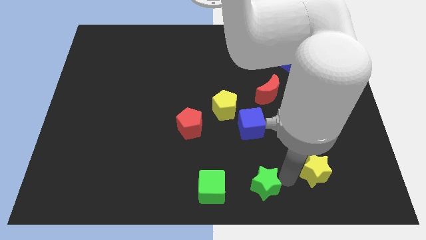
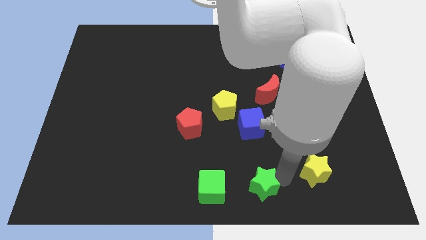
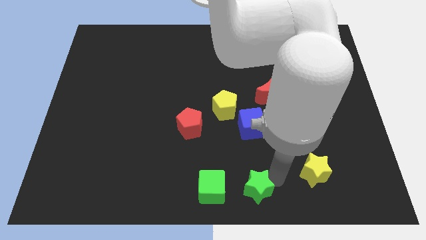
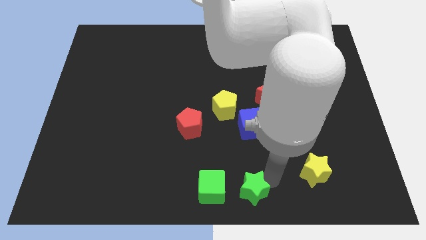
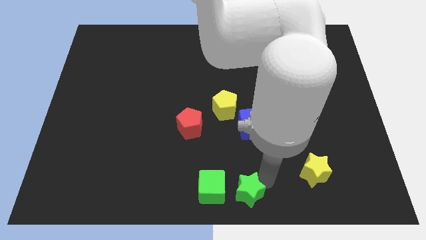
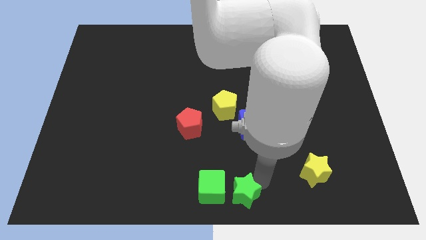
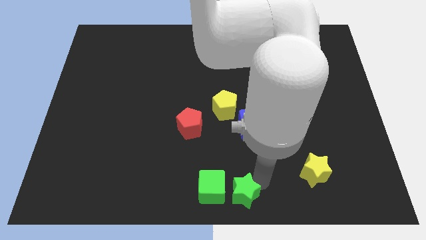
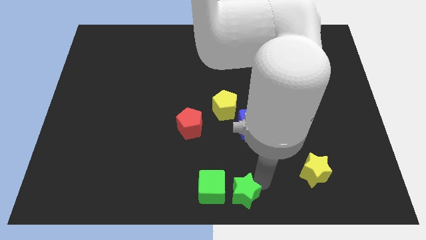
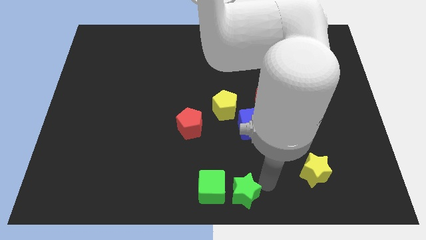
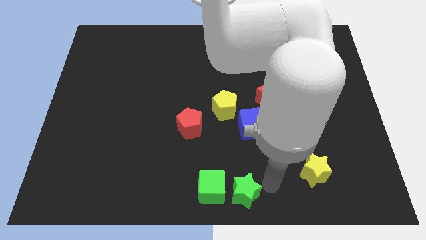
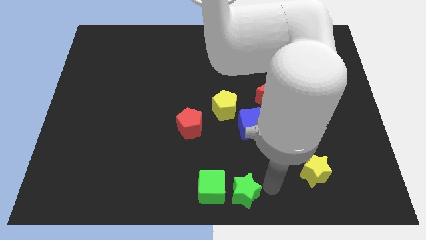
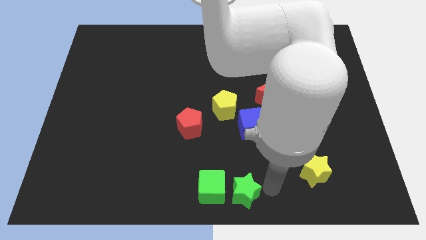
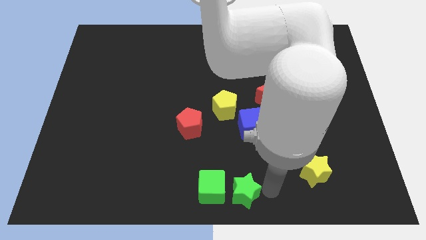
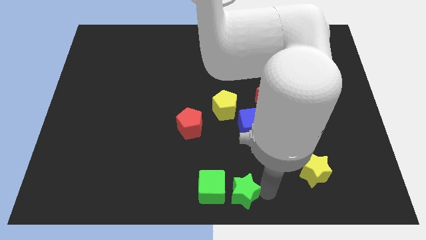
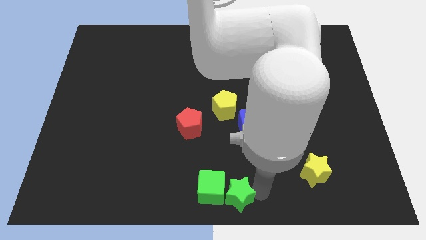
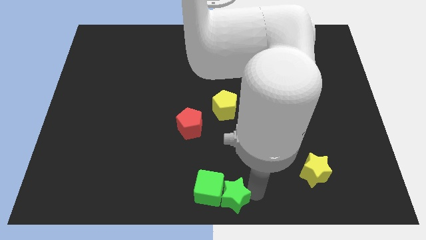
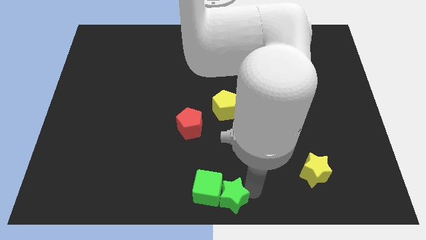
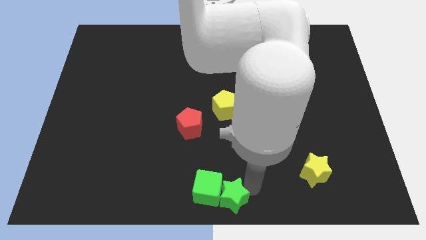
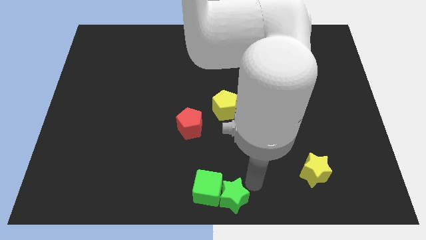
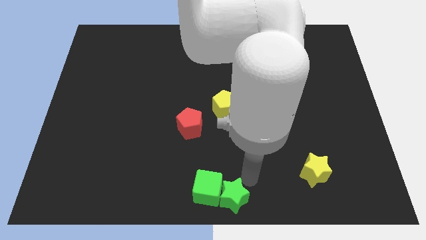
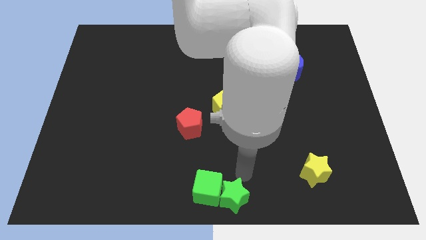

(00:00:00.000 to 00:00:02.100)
push the green star into the green cube

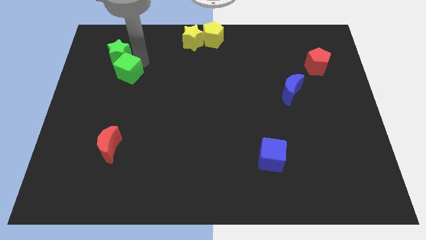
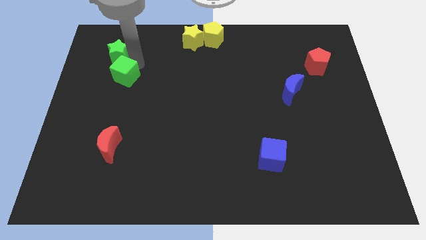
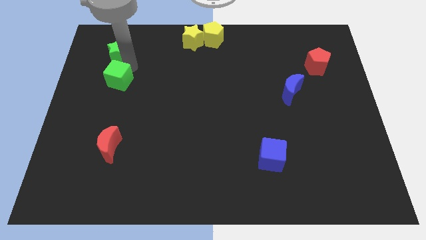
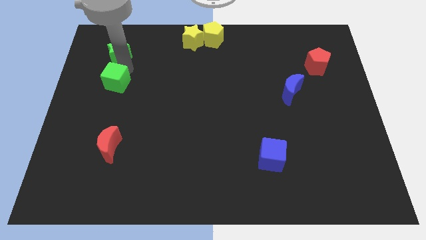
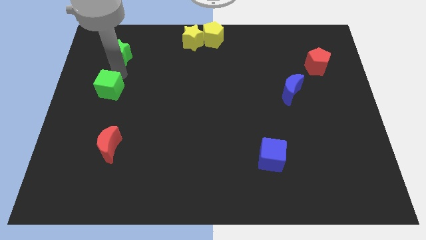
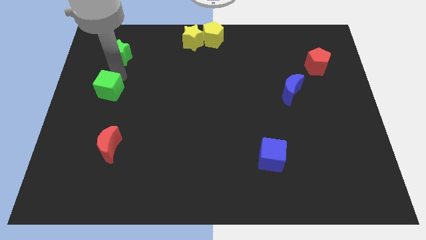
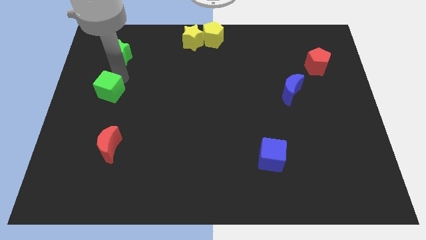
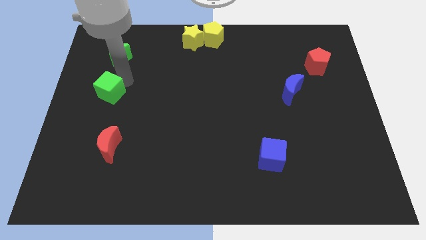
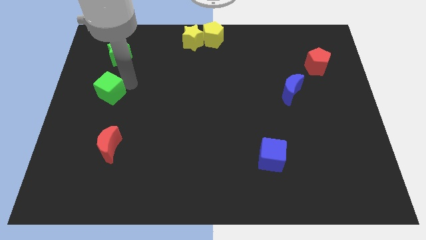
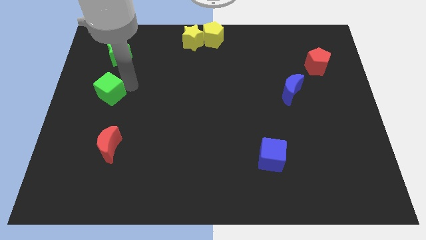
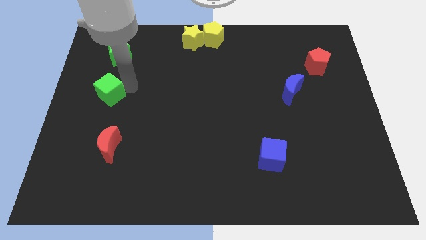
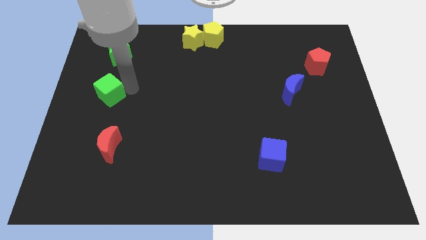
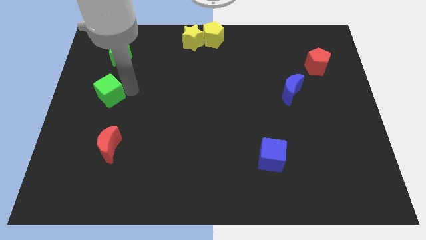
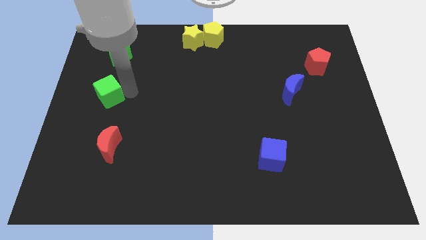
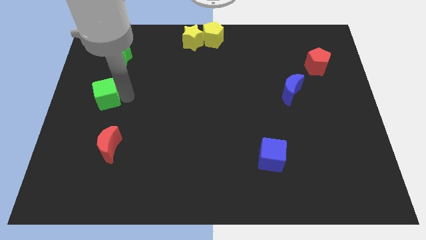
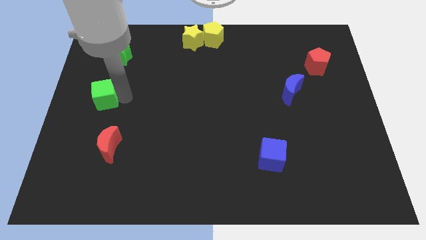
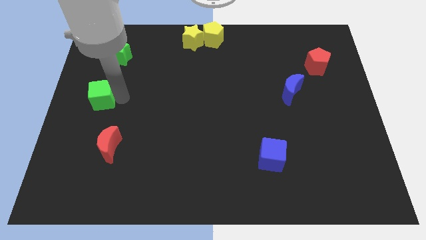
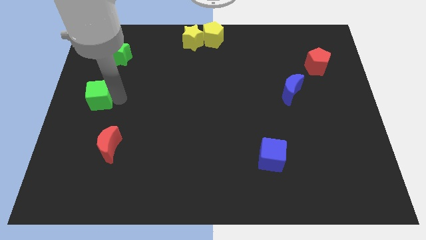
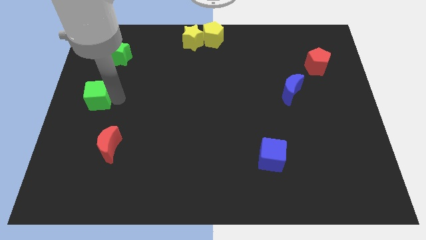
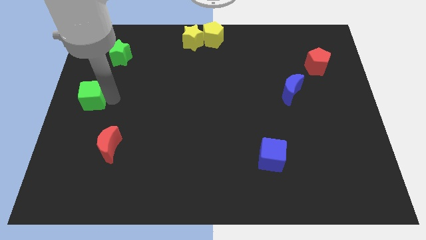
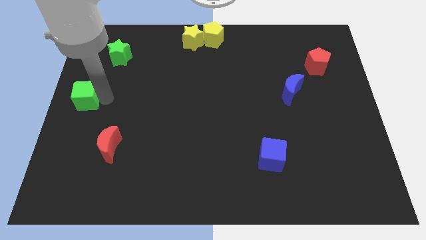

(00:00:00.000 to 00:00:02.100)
separate the green cube from the green star

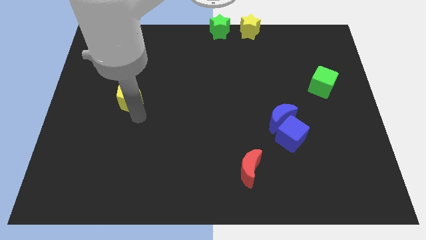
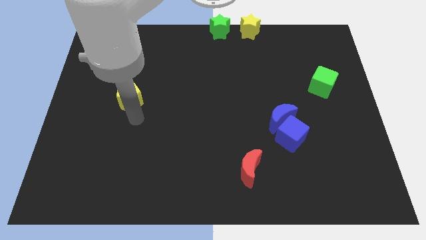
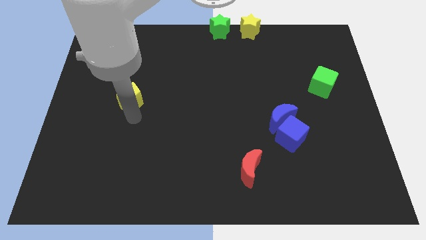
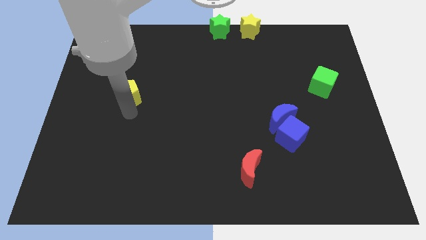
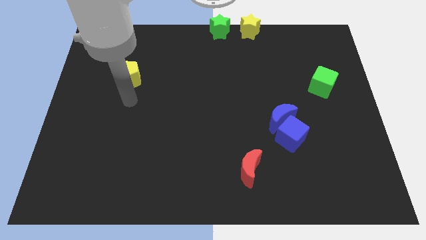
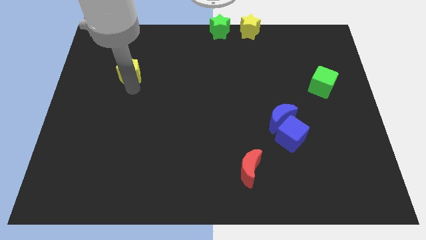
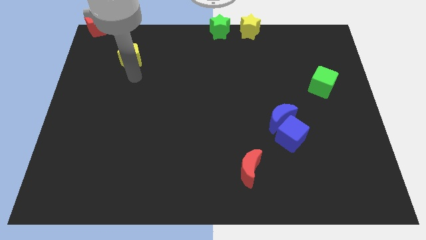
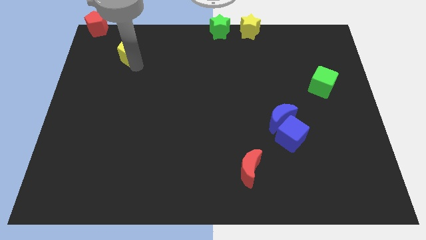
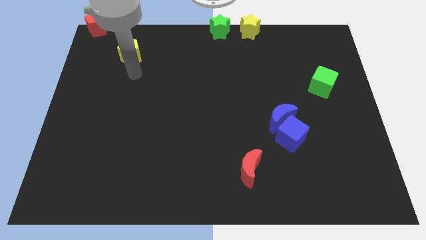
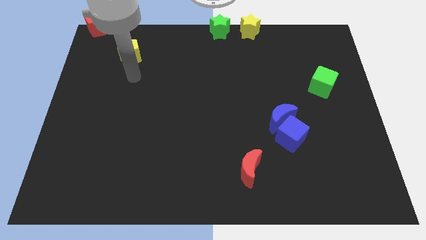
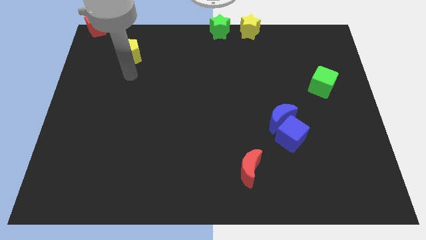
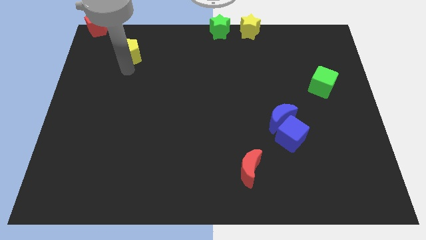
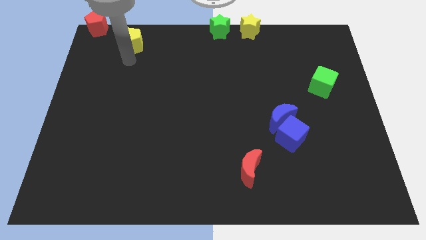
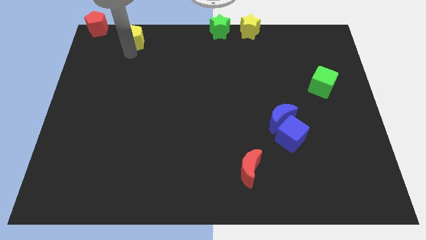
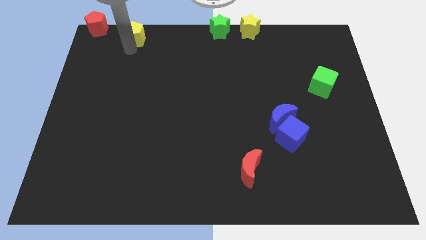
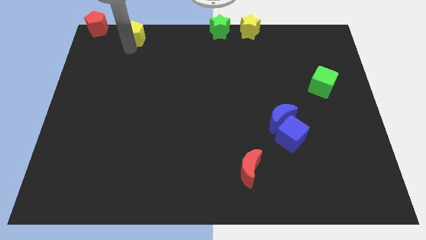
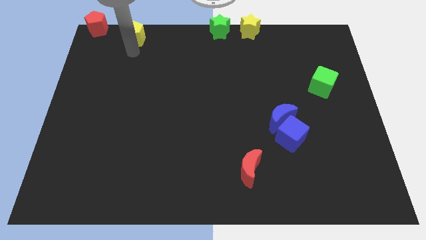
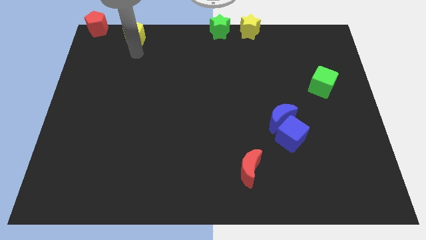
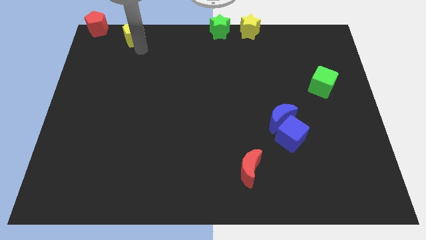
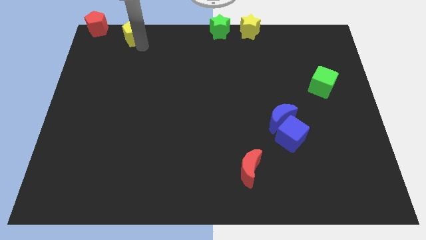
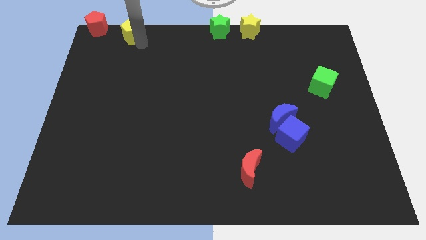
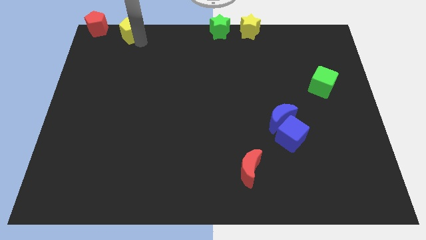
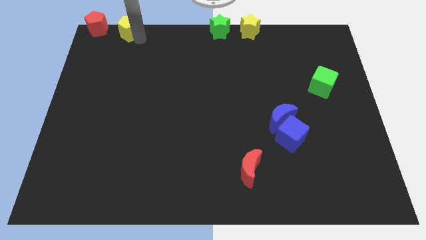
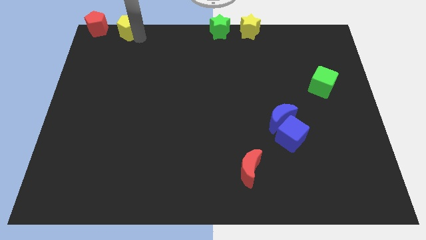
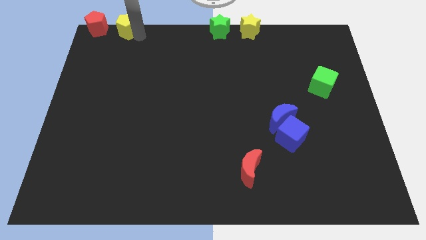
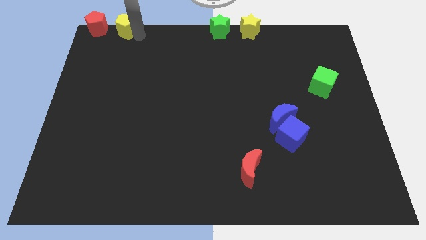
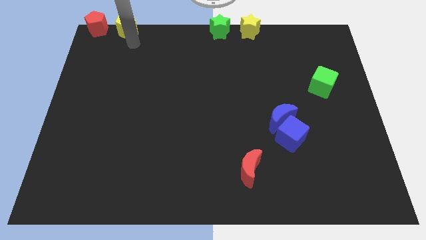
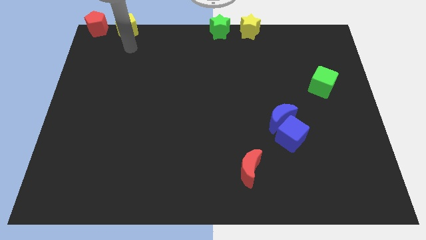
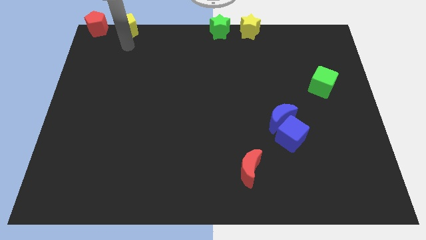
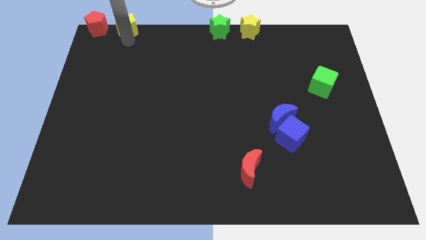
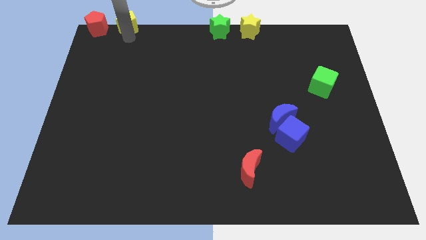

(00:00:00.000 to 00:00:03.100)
place yellow pentagon beside red pentagon

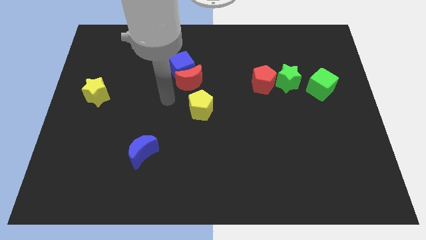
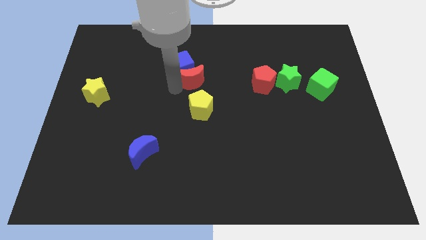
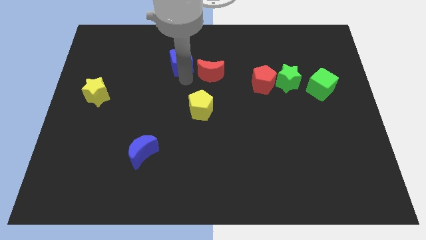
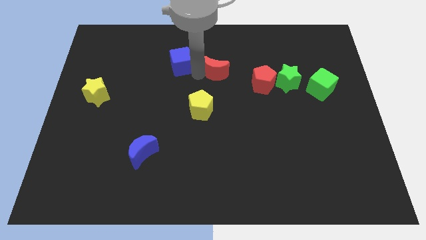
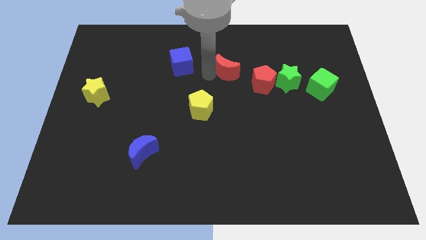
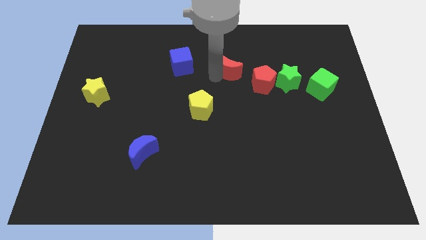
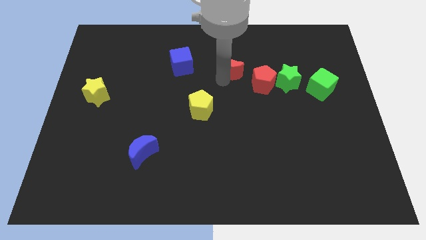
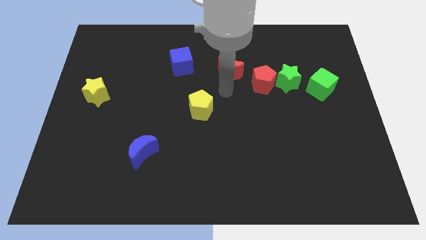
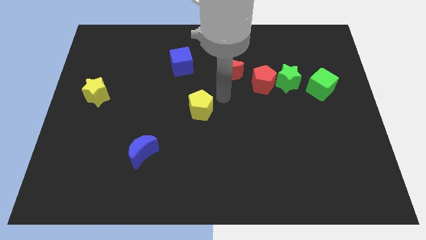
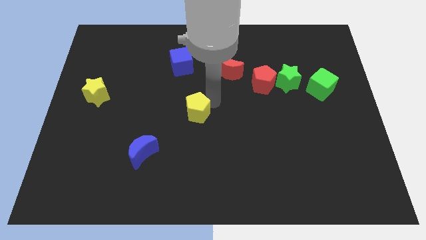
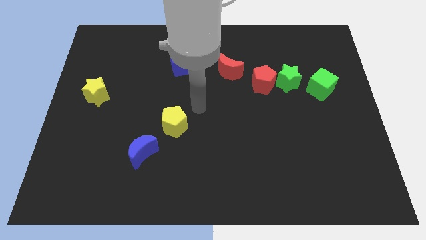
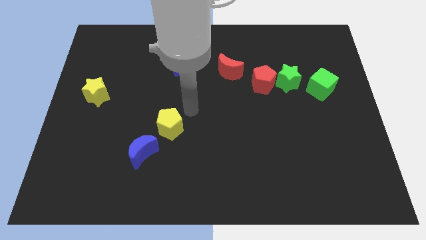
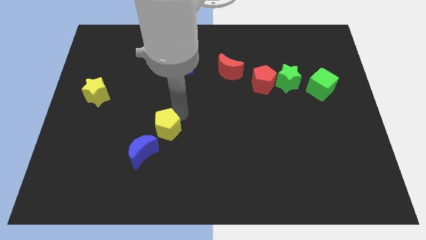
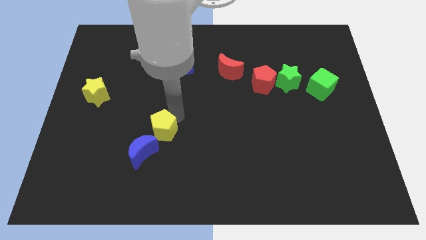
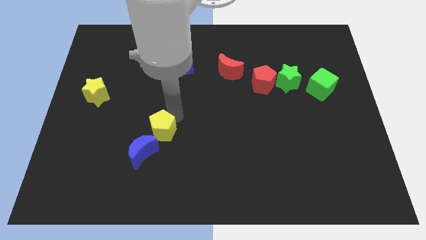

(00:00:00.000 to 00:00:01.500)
push the yellow pentagon into the top side blue crescent

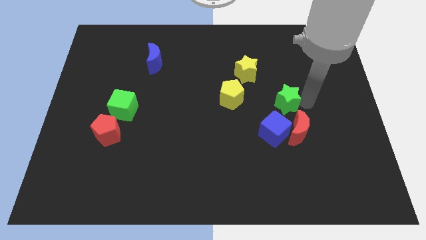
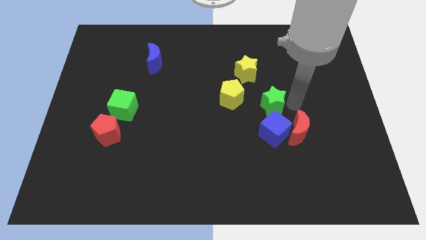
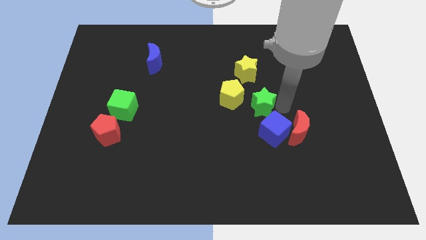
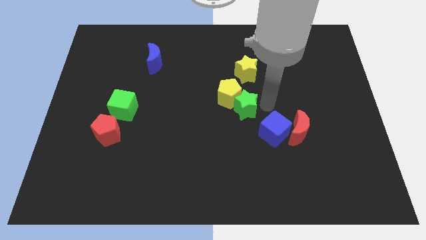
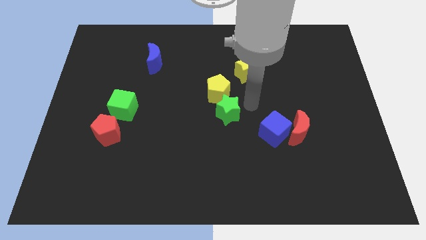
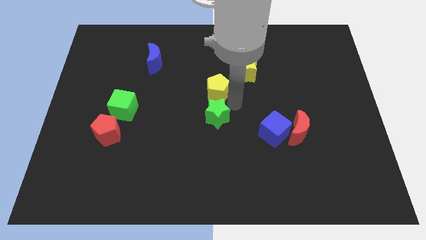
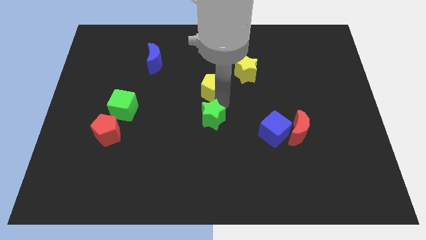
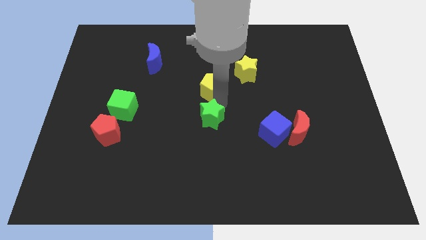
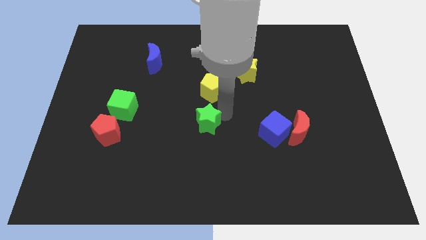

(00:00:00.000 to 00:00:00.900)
place green star below yellow pentagon
